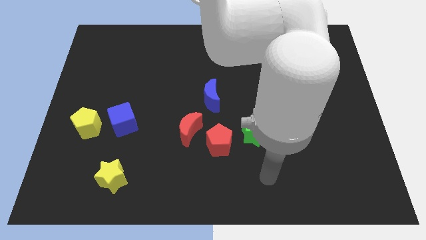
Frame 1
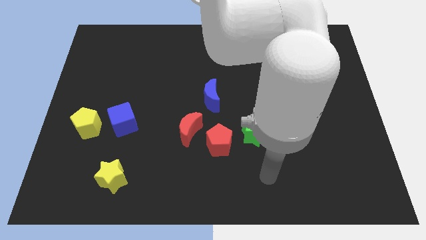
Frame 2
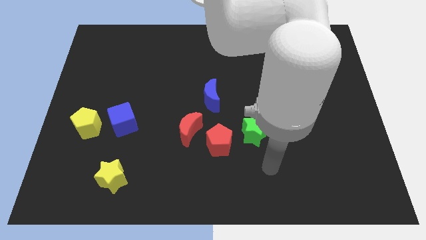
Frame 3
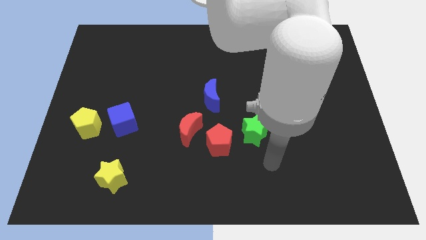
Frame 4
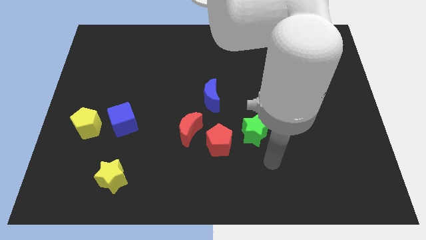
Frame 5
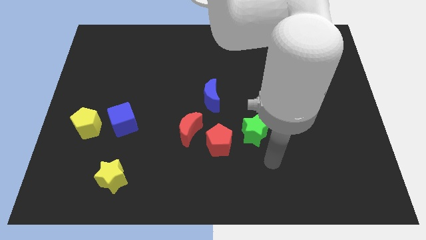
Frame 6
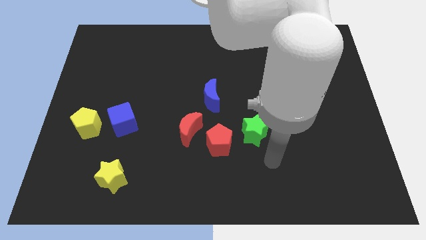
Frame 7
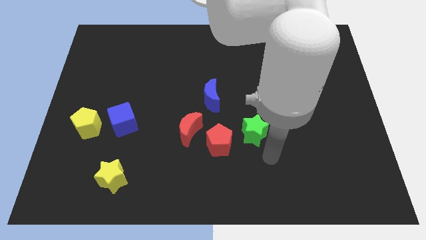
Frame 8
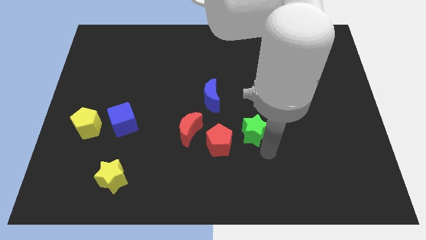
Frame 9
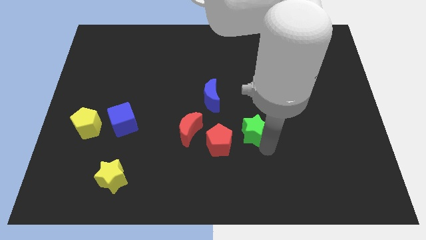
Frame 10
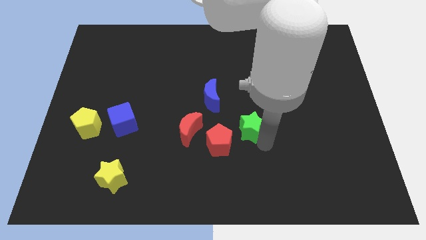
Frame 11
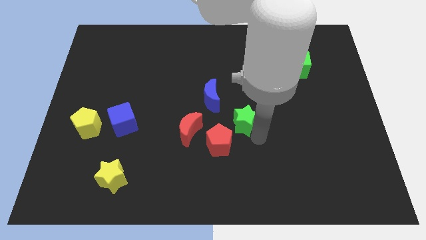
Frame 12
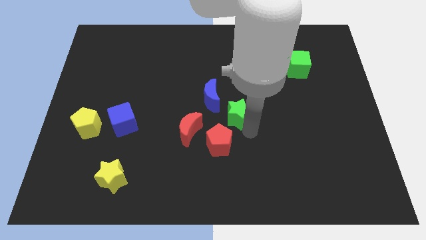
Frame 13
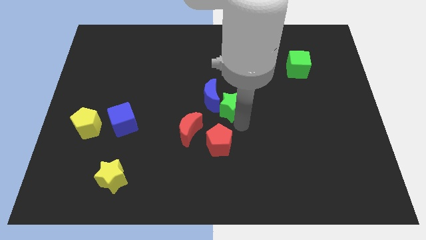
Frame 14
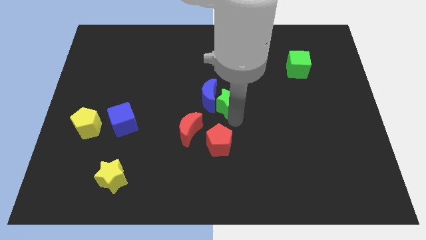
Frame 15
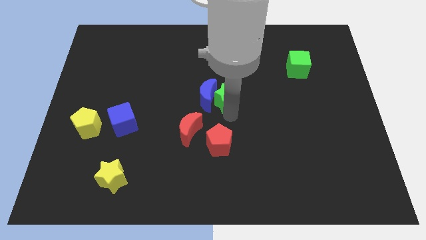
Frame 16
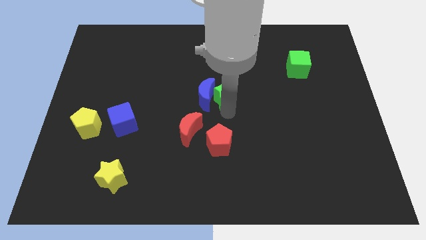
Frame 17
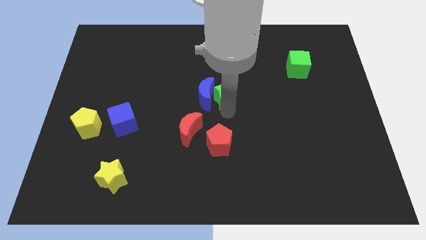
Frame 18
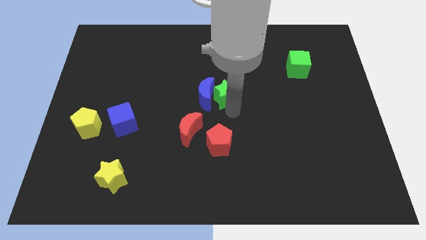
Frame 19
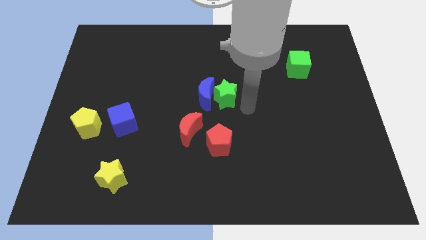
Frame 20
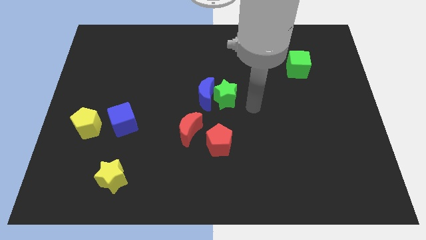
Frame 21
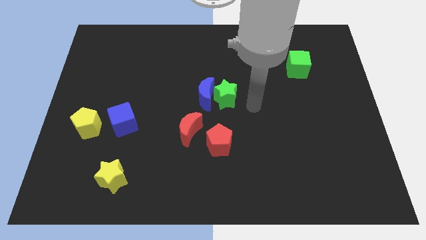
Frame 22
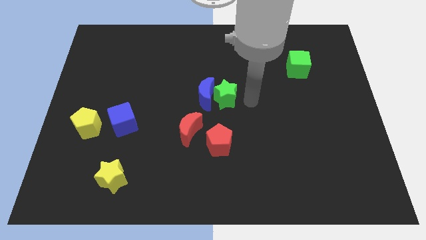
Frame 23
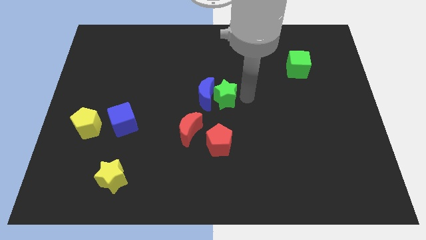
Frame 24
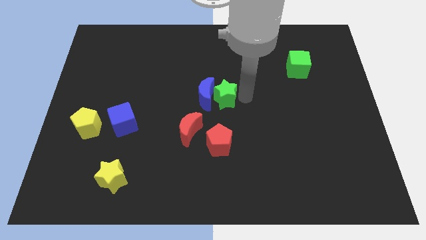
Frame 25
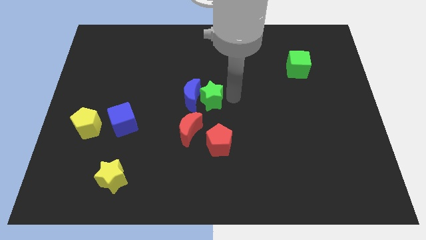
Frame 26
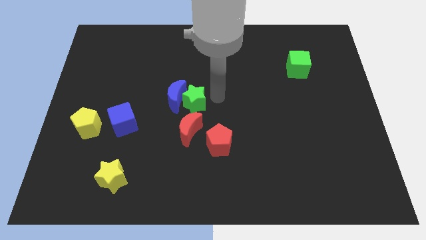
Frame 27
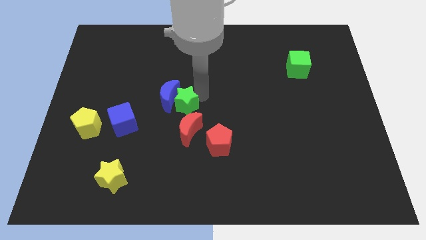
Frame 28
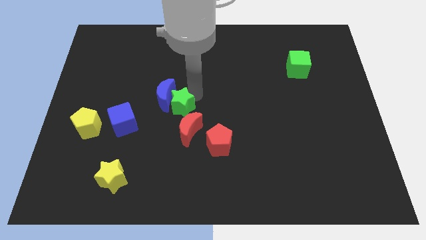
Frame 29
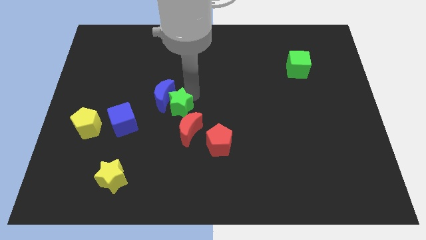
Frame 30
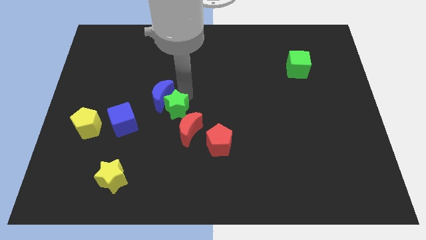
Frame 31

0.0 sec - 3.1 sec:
push the green star into the blue crescent

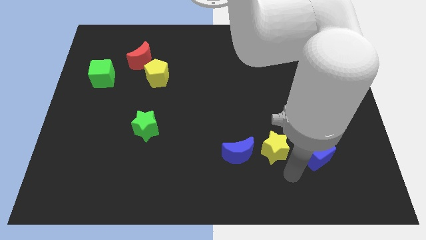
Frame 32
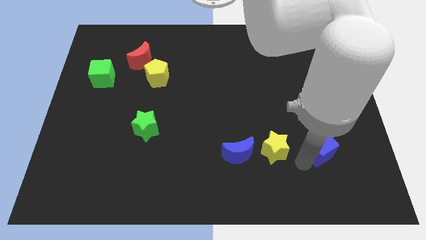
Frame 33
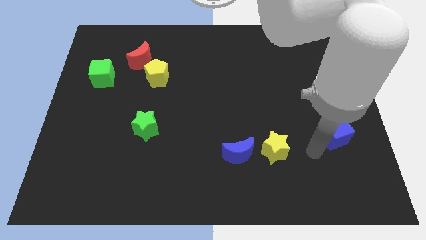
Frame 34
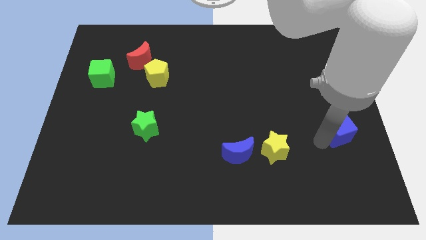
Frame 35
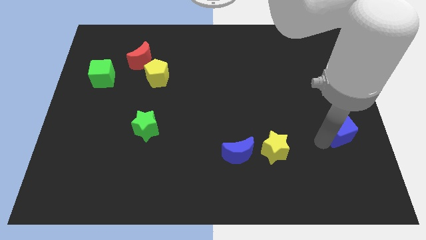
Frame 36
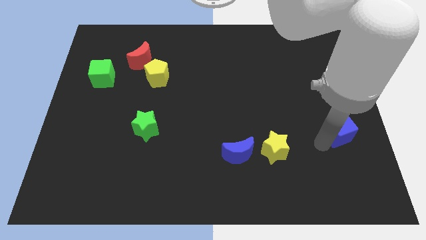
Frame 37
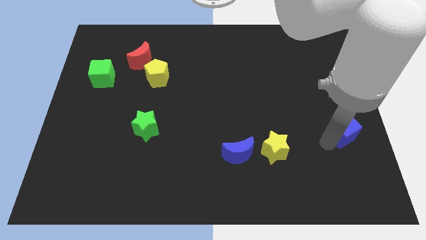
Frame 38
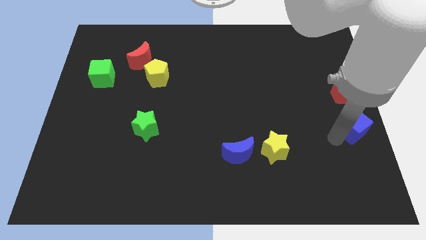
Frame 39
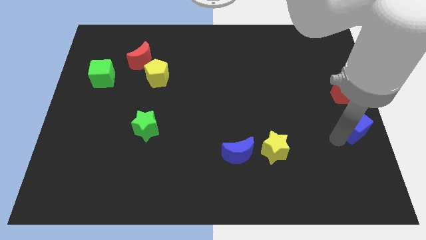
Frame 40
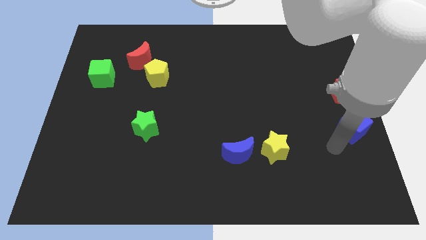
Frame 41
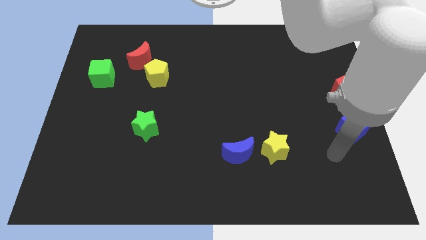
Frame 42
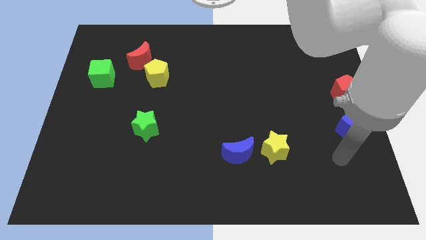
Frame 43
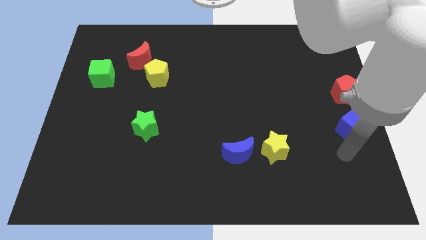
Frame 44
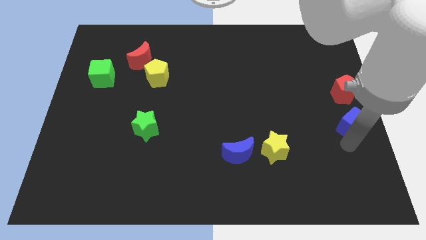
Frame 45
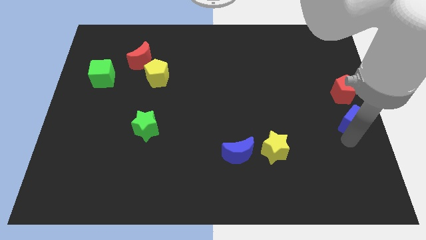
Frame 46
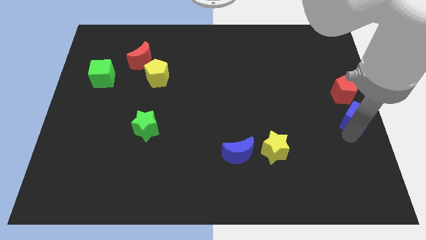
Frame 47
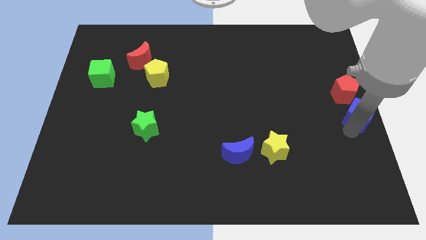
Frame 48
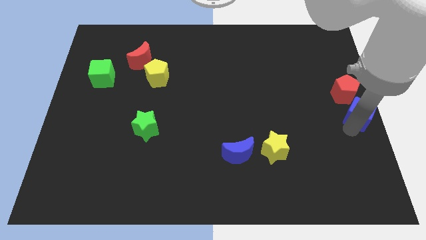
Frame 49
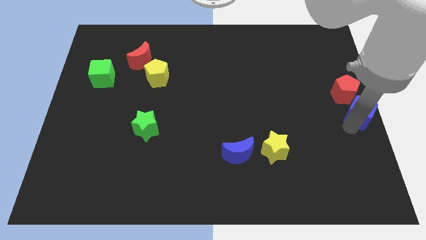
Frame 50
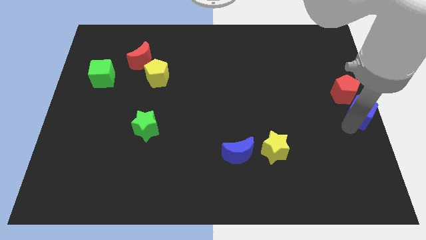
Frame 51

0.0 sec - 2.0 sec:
push the blue cube to the bottom side of the red pentagon

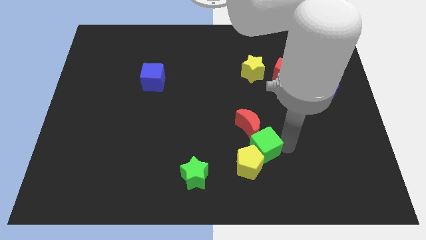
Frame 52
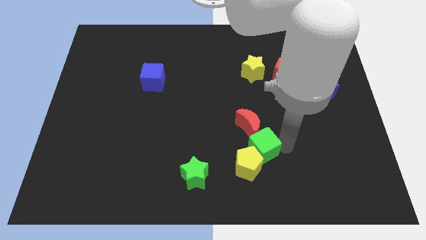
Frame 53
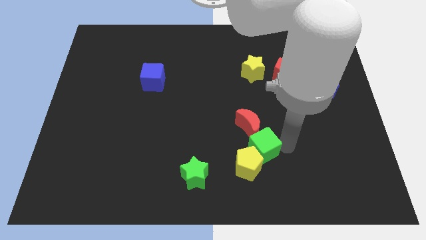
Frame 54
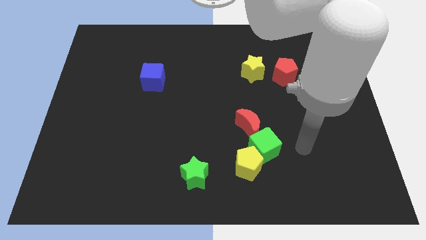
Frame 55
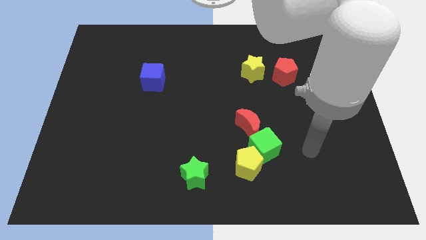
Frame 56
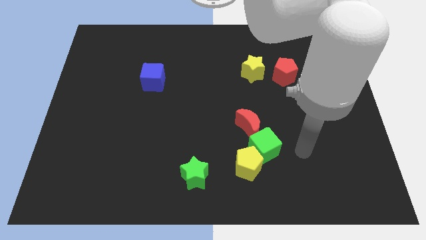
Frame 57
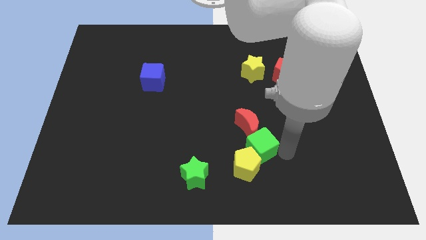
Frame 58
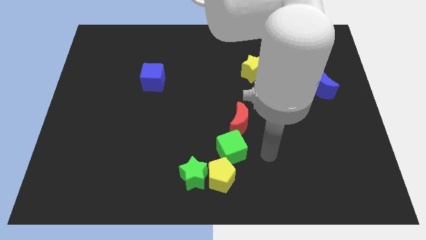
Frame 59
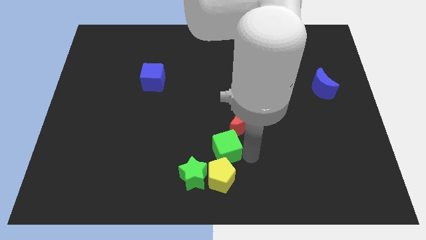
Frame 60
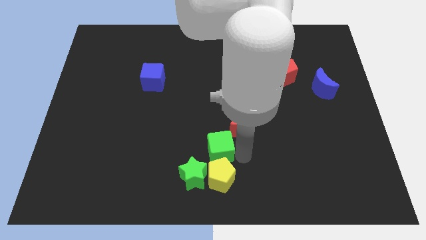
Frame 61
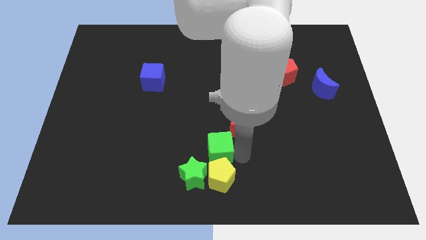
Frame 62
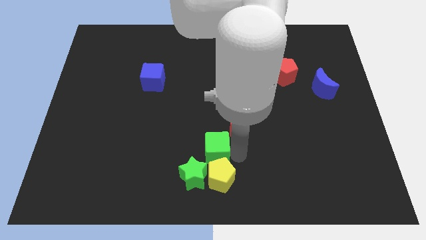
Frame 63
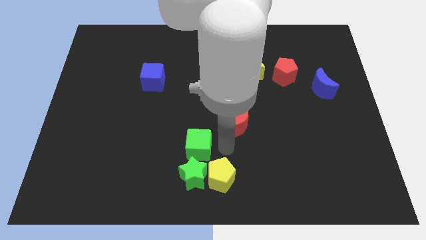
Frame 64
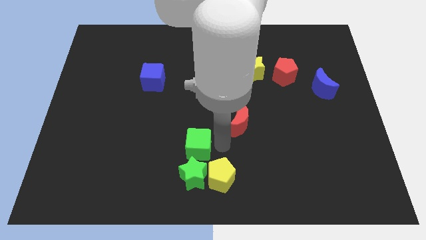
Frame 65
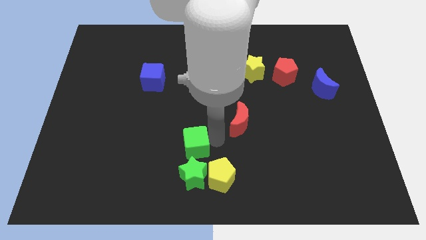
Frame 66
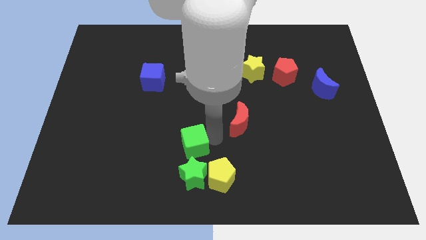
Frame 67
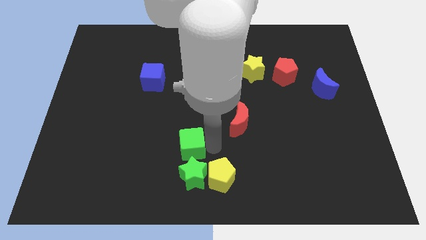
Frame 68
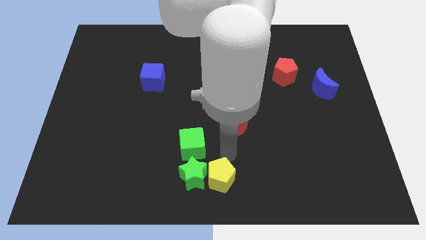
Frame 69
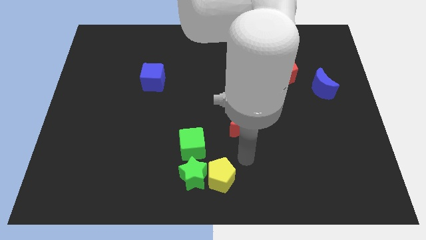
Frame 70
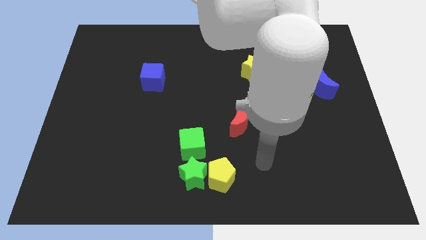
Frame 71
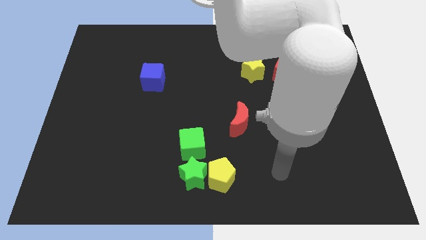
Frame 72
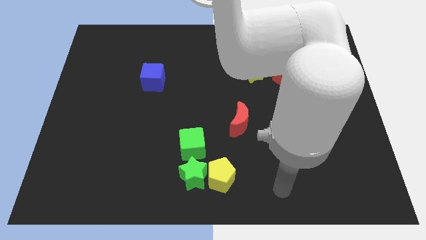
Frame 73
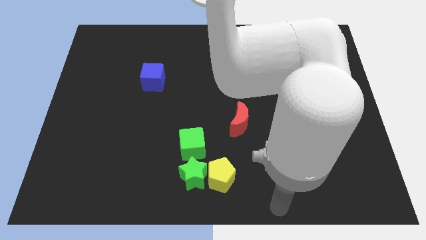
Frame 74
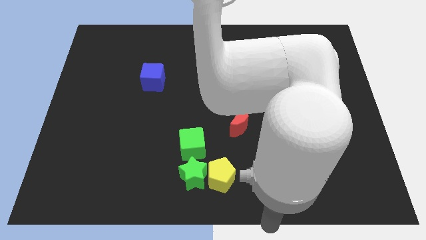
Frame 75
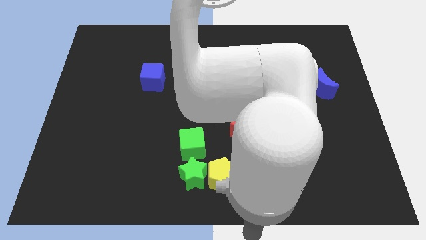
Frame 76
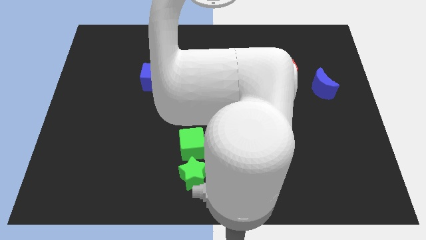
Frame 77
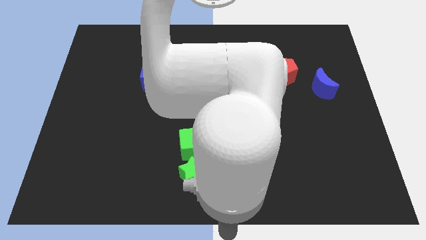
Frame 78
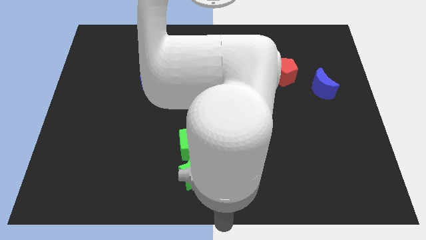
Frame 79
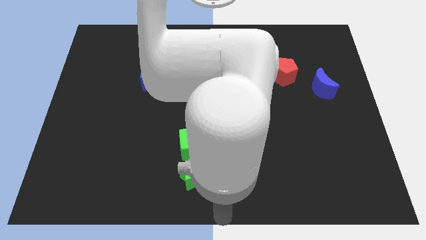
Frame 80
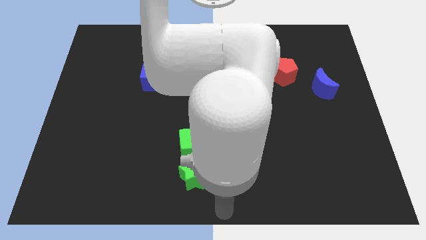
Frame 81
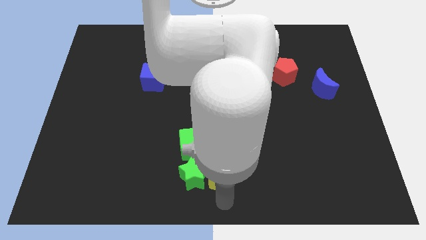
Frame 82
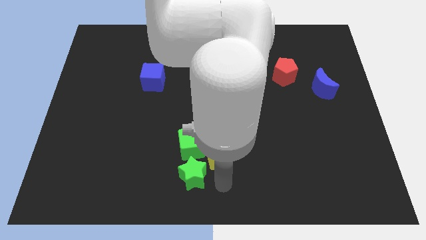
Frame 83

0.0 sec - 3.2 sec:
push the green cube vertically above the green star

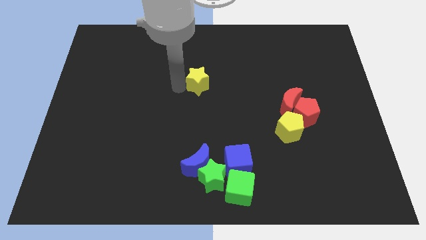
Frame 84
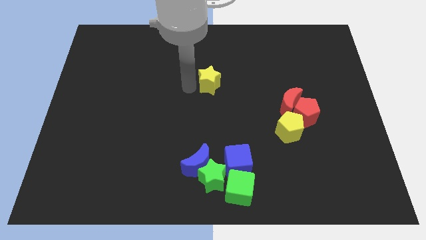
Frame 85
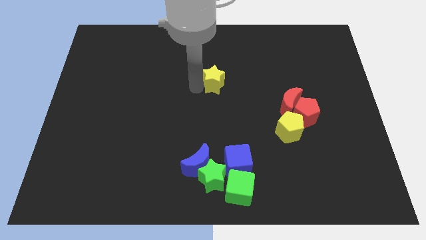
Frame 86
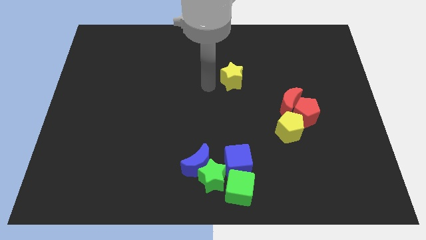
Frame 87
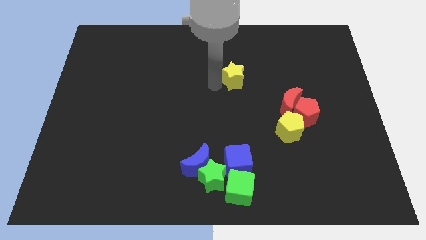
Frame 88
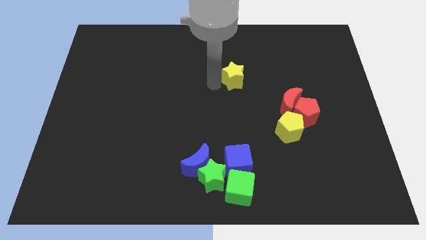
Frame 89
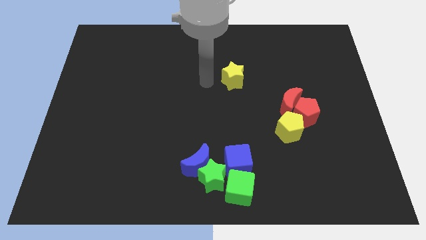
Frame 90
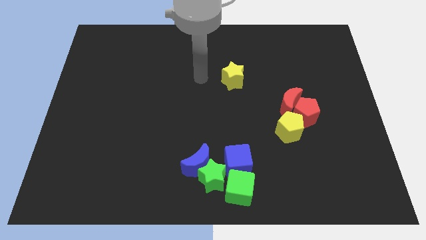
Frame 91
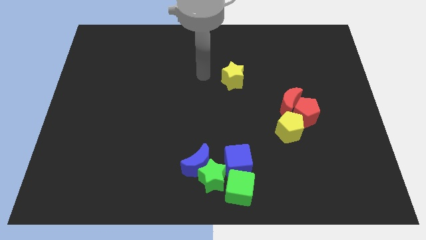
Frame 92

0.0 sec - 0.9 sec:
move the yellow star to the right of the board
